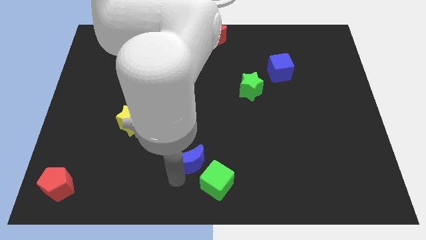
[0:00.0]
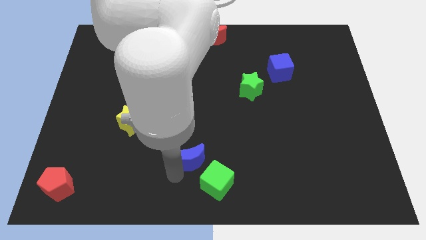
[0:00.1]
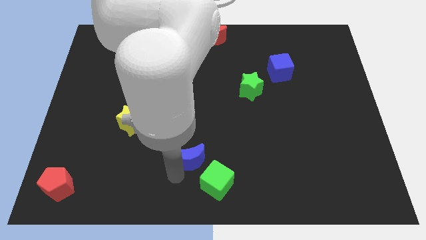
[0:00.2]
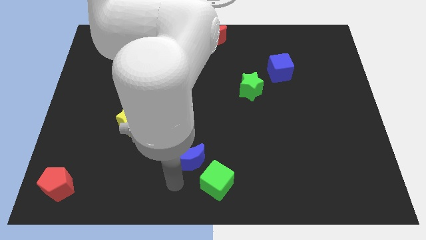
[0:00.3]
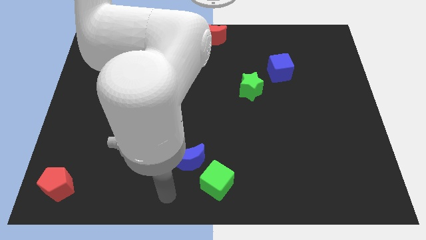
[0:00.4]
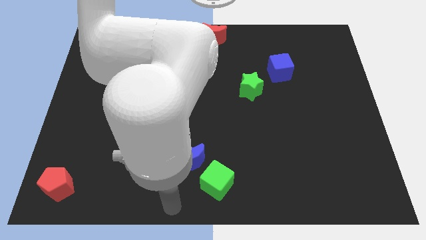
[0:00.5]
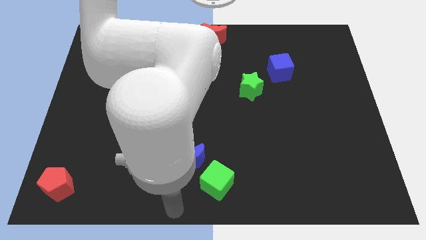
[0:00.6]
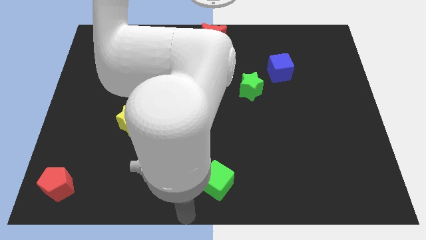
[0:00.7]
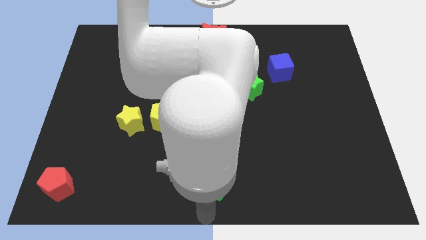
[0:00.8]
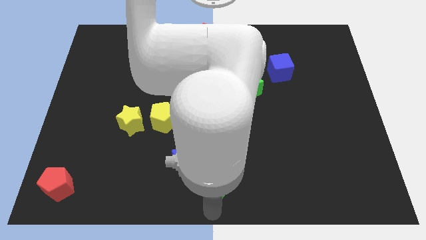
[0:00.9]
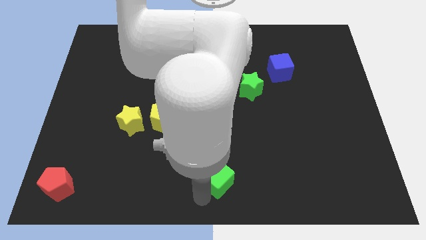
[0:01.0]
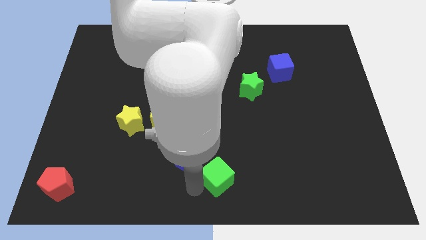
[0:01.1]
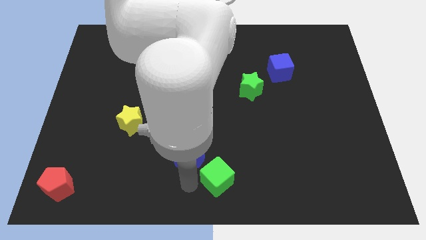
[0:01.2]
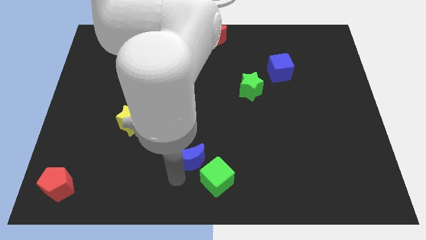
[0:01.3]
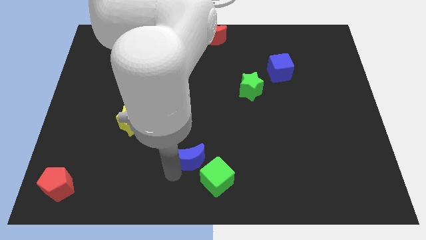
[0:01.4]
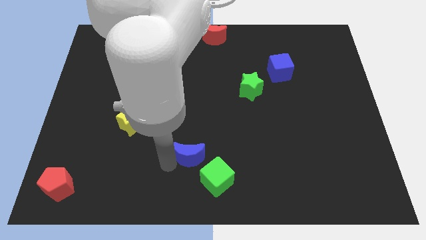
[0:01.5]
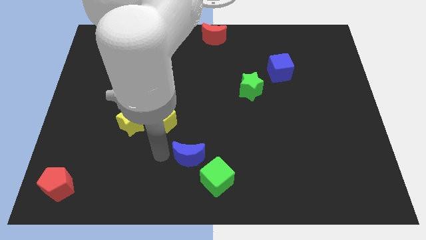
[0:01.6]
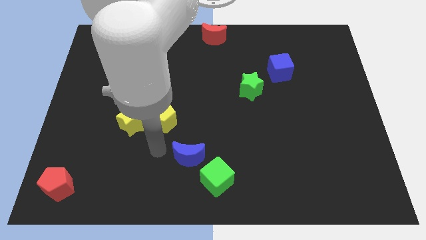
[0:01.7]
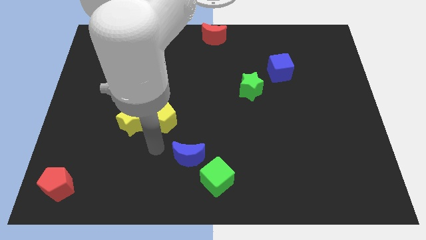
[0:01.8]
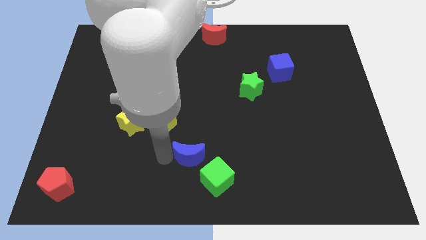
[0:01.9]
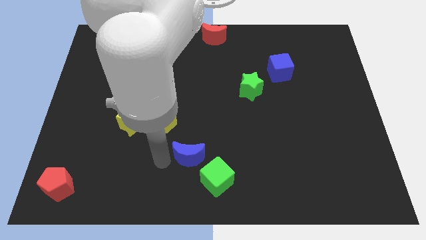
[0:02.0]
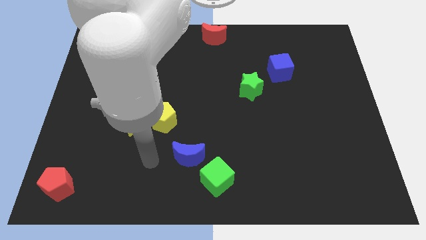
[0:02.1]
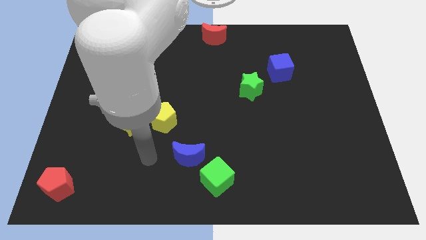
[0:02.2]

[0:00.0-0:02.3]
move the blue crescent in between the yellow pentagon and the green cube

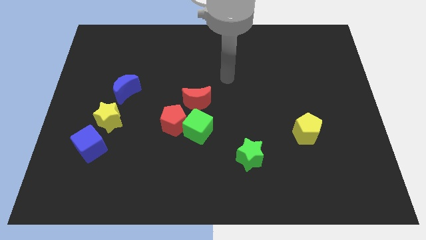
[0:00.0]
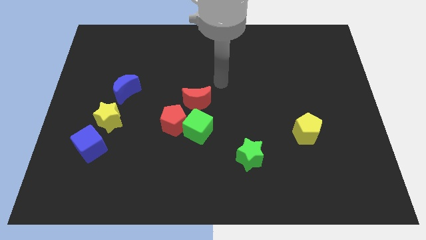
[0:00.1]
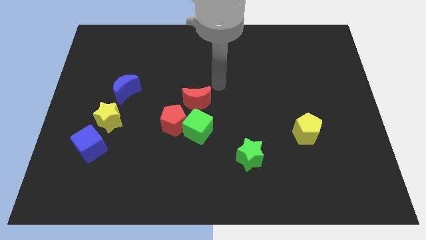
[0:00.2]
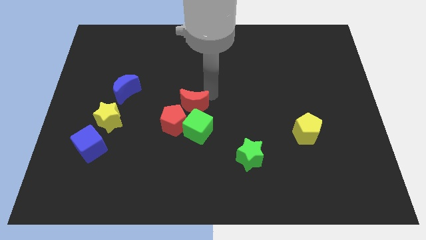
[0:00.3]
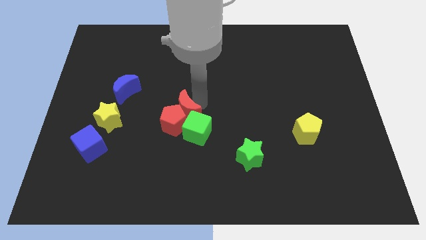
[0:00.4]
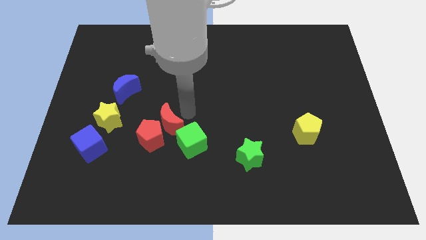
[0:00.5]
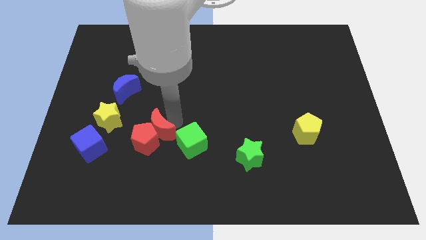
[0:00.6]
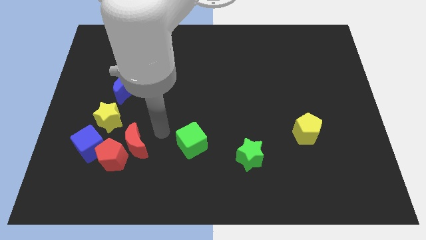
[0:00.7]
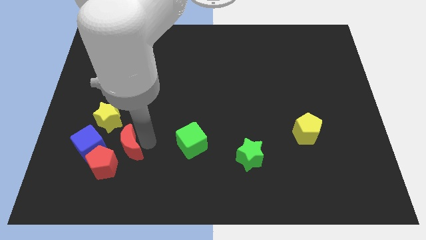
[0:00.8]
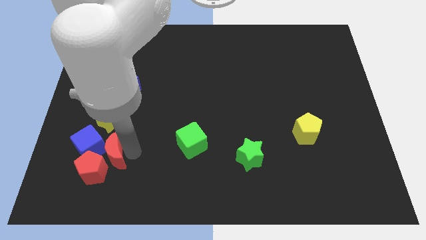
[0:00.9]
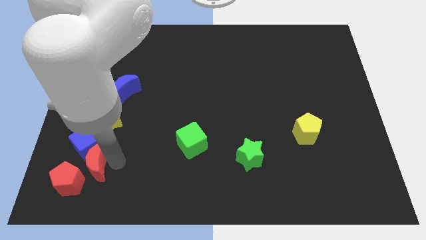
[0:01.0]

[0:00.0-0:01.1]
push the red moon with the red pentagon towards the bottom right corner of the board

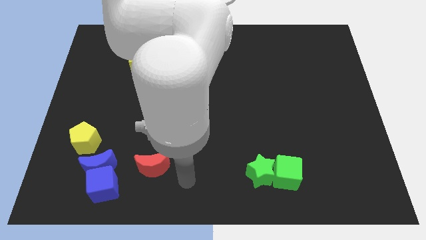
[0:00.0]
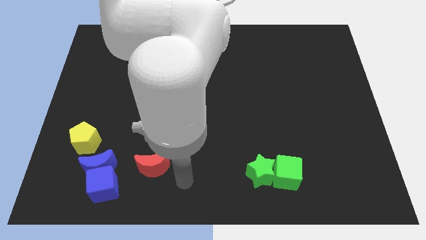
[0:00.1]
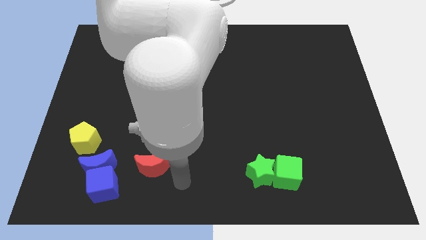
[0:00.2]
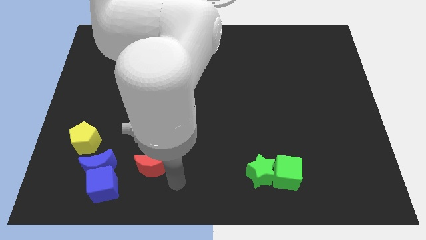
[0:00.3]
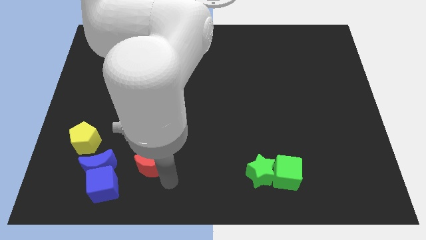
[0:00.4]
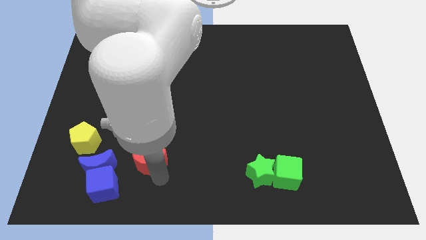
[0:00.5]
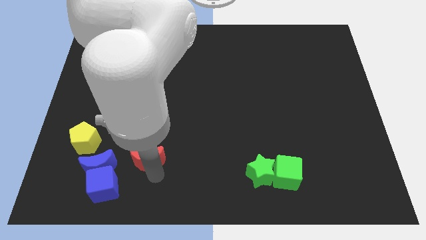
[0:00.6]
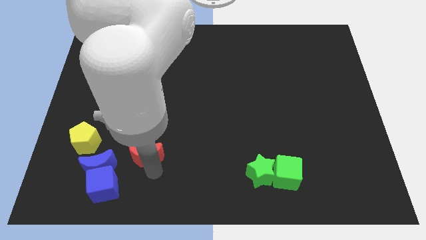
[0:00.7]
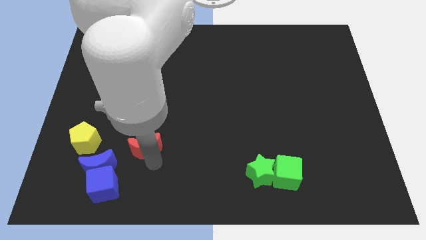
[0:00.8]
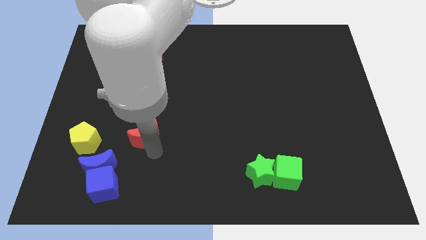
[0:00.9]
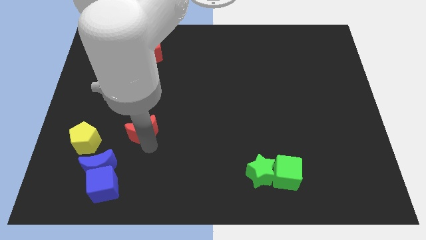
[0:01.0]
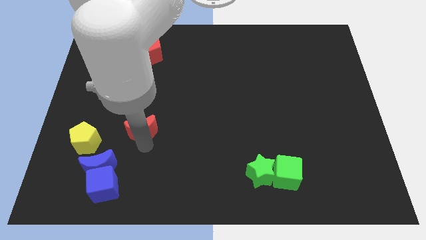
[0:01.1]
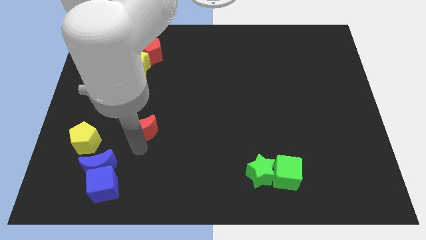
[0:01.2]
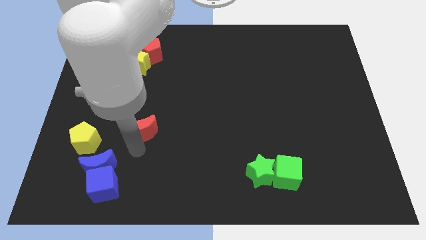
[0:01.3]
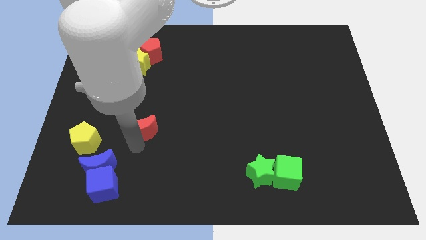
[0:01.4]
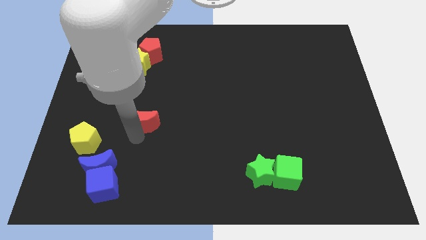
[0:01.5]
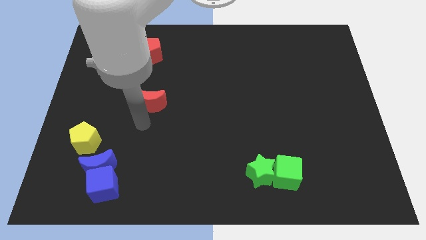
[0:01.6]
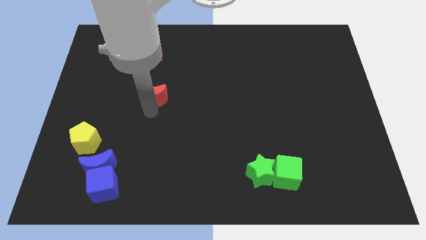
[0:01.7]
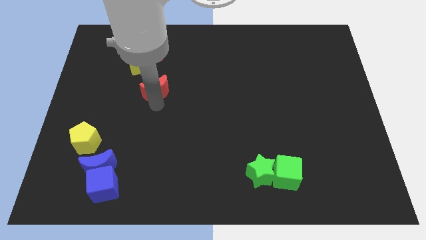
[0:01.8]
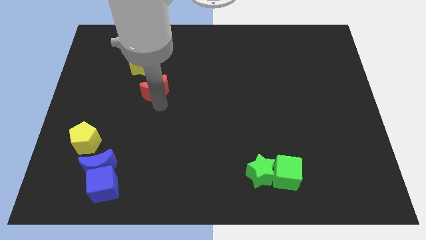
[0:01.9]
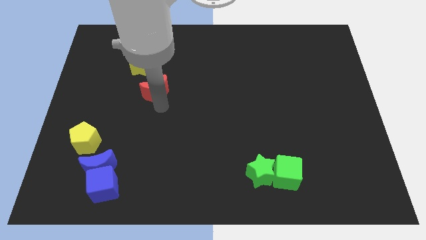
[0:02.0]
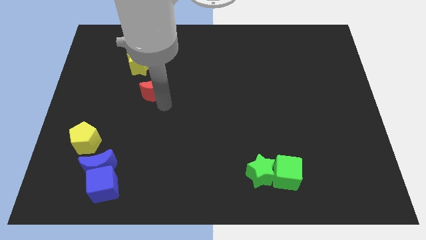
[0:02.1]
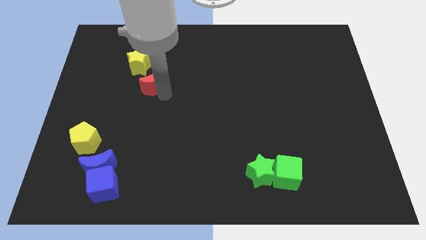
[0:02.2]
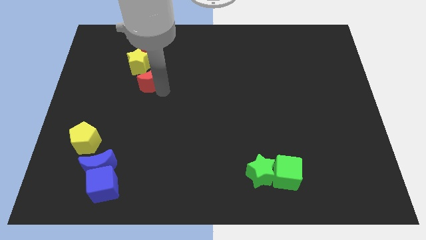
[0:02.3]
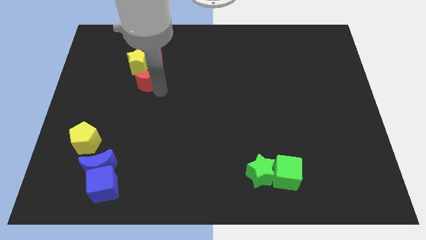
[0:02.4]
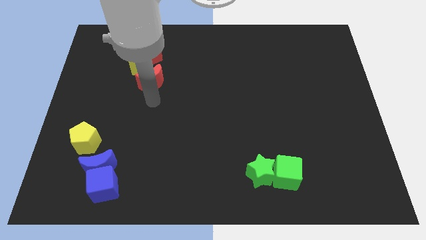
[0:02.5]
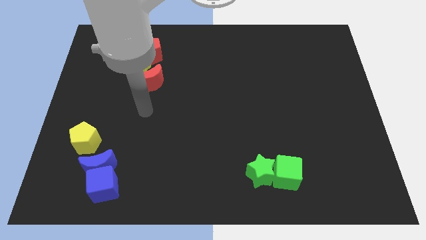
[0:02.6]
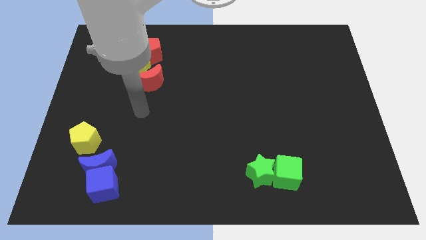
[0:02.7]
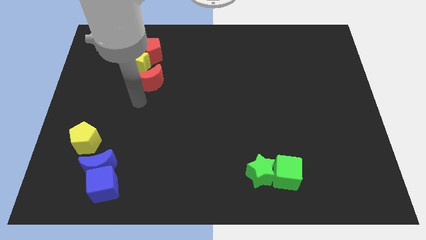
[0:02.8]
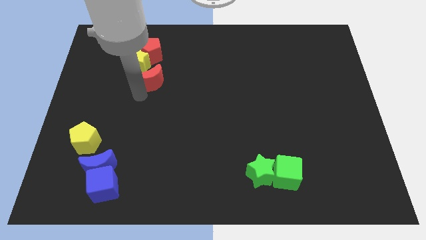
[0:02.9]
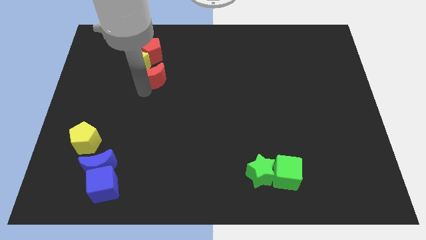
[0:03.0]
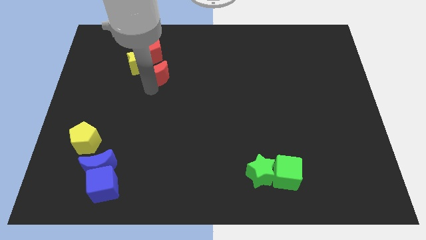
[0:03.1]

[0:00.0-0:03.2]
place the red moon to the bottom right of the yellow star

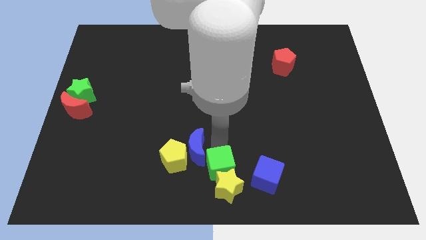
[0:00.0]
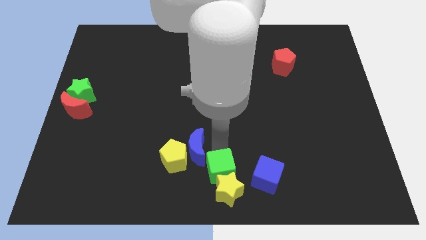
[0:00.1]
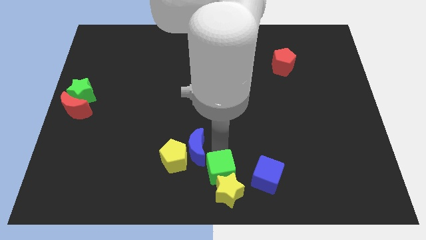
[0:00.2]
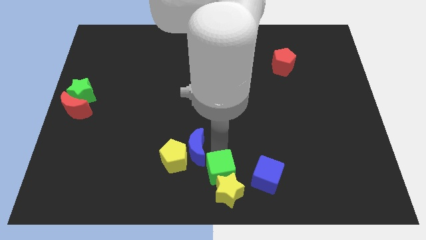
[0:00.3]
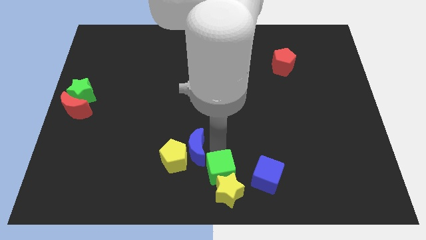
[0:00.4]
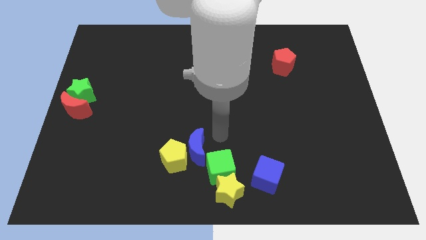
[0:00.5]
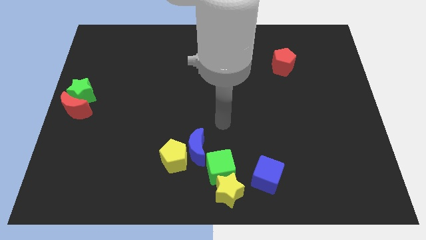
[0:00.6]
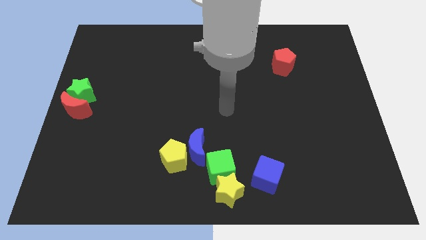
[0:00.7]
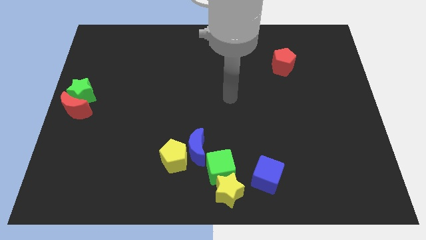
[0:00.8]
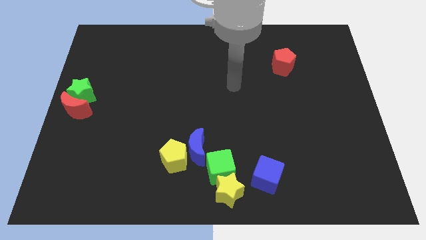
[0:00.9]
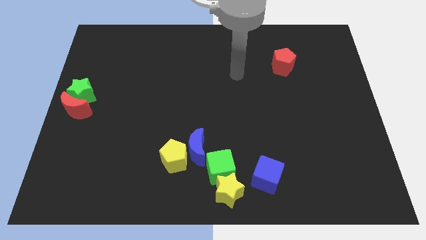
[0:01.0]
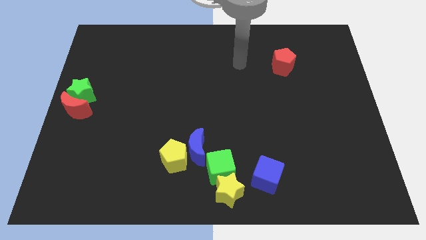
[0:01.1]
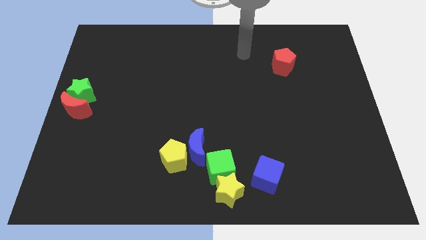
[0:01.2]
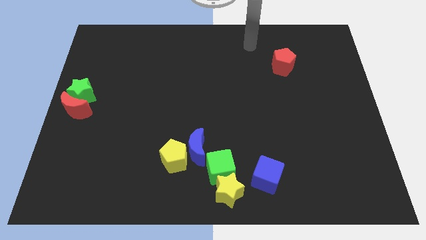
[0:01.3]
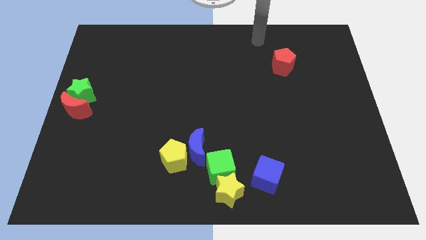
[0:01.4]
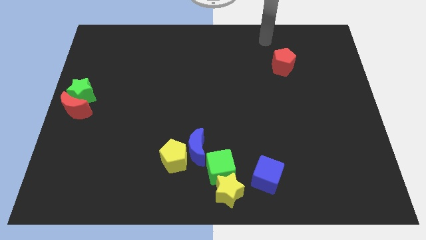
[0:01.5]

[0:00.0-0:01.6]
go away from the green cube

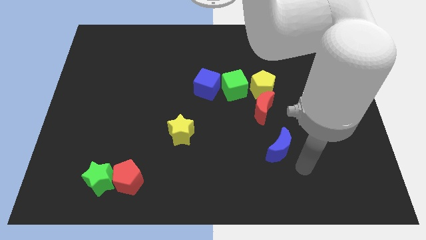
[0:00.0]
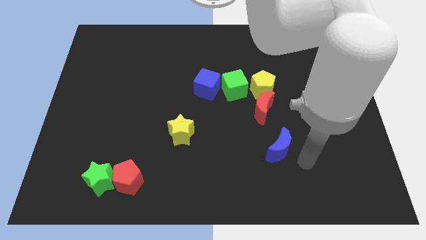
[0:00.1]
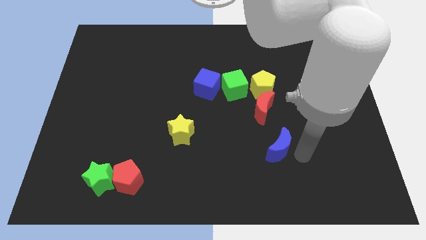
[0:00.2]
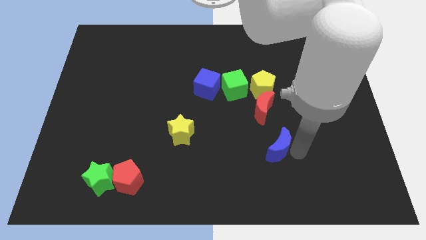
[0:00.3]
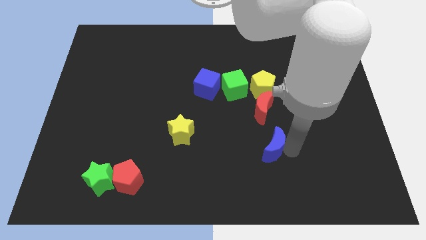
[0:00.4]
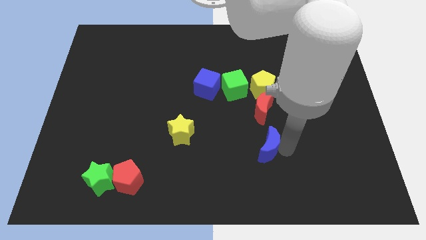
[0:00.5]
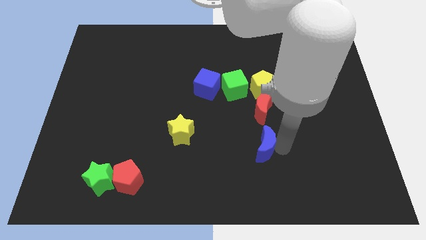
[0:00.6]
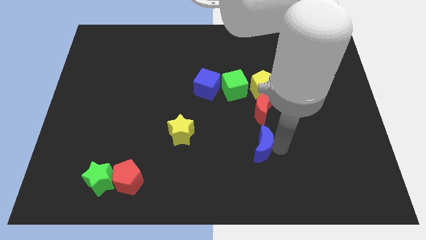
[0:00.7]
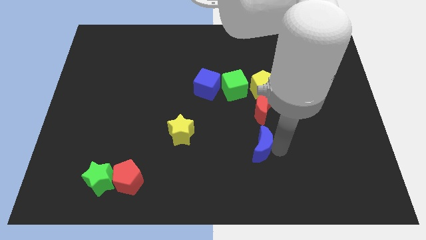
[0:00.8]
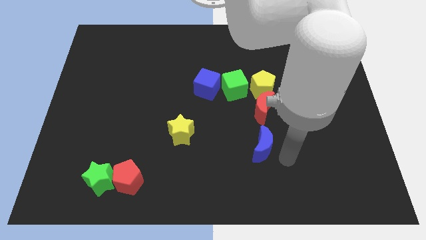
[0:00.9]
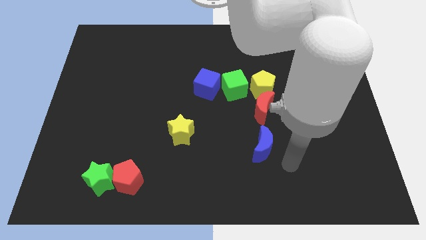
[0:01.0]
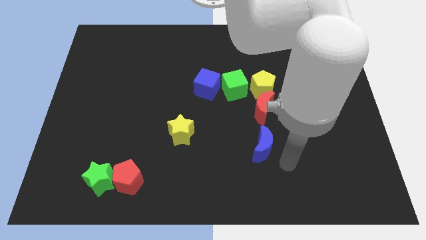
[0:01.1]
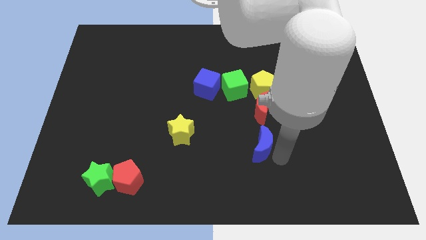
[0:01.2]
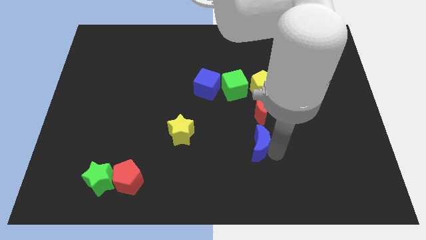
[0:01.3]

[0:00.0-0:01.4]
place the blue crescent under the red crescent
